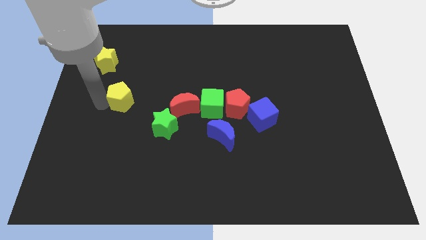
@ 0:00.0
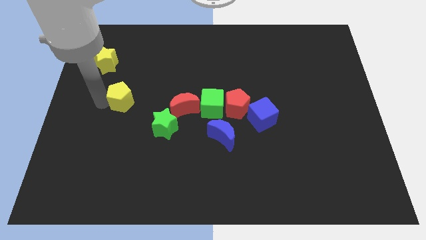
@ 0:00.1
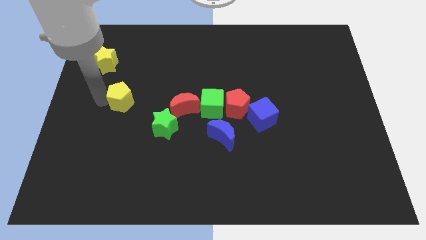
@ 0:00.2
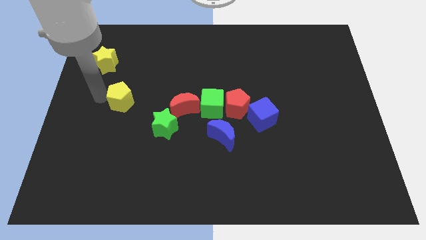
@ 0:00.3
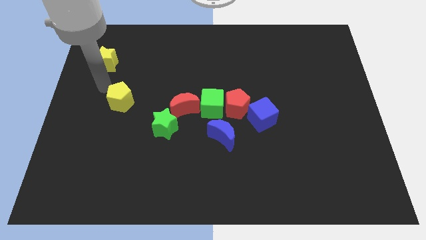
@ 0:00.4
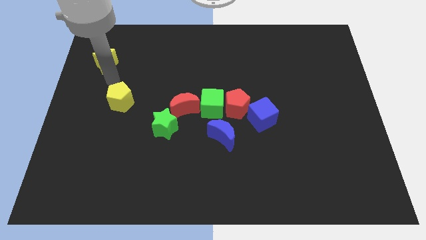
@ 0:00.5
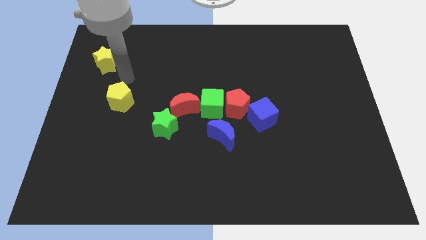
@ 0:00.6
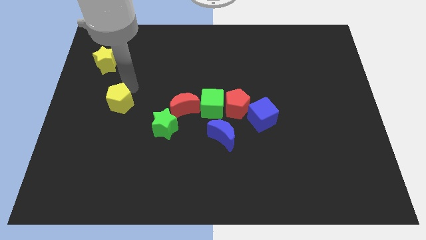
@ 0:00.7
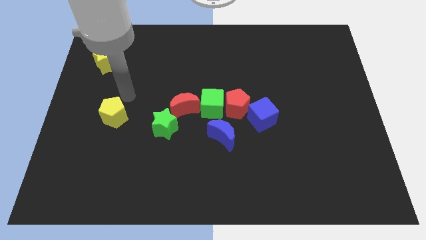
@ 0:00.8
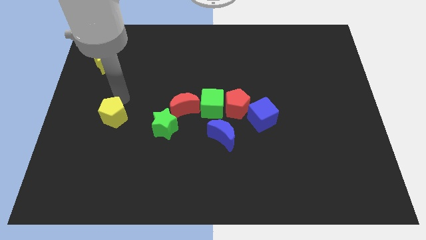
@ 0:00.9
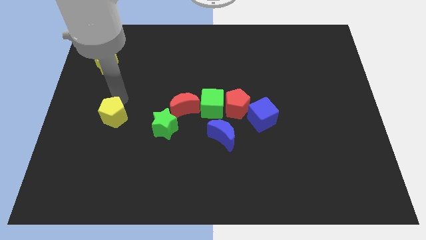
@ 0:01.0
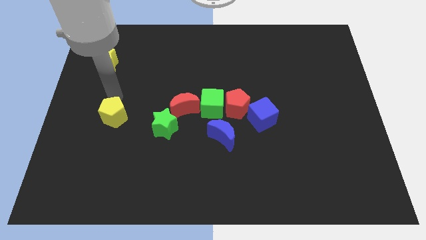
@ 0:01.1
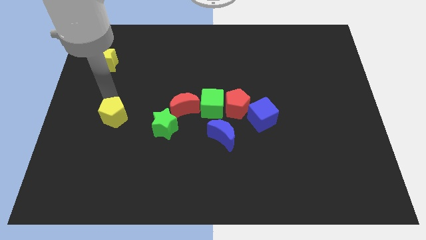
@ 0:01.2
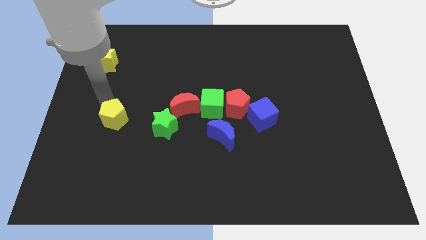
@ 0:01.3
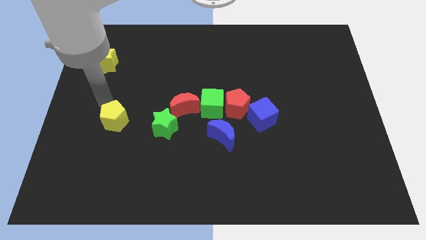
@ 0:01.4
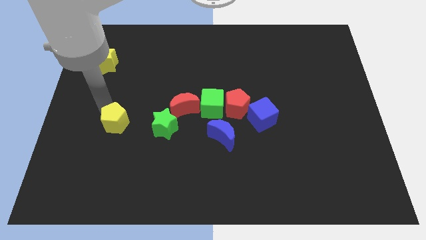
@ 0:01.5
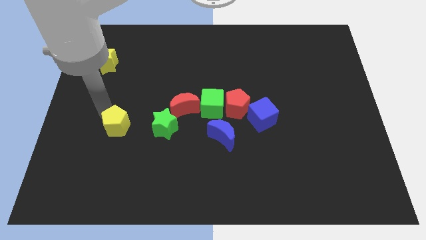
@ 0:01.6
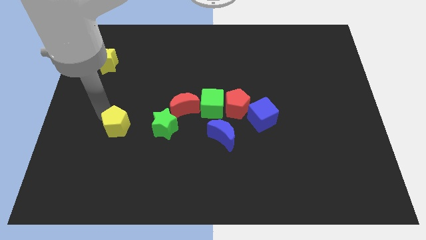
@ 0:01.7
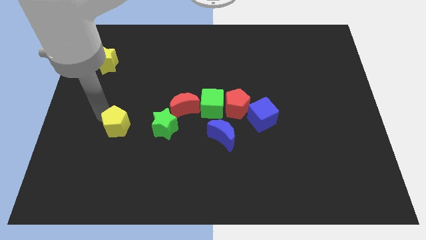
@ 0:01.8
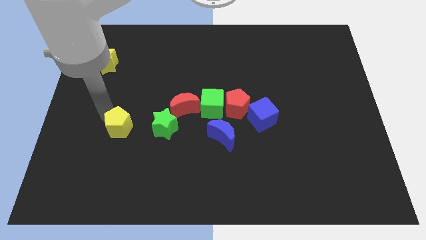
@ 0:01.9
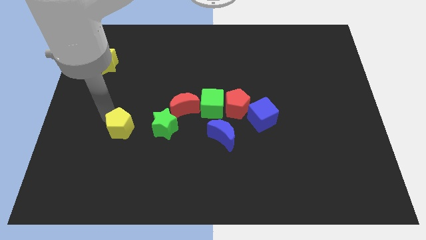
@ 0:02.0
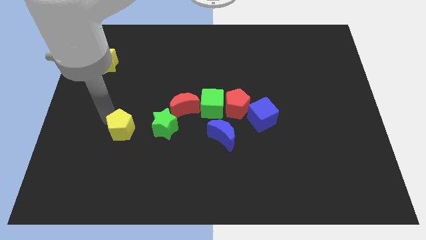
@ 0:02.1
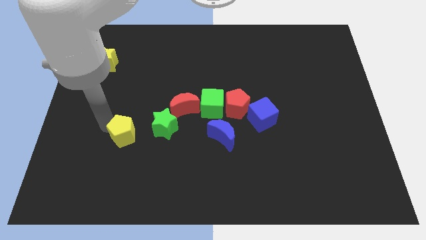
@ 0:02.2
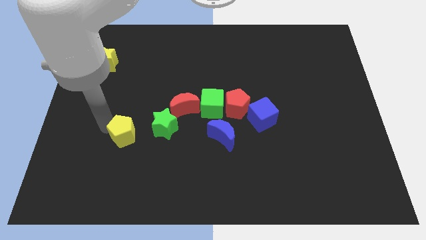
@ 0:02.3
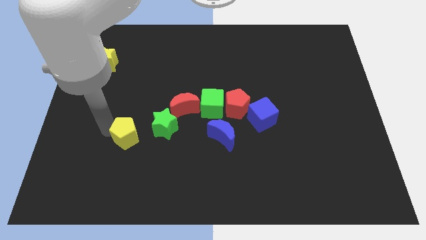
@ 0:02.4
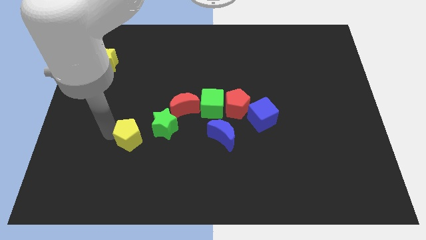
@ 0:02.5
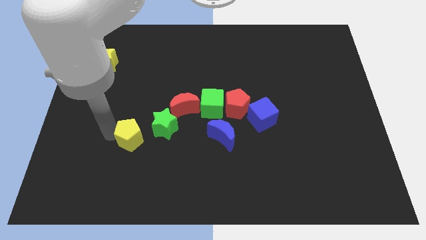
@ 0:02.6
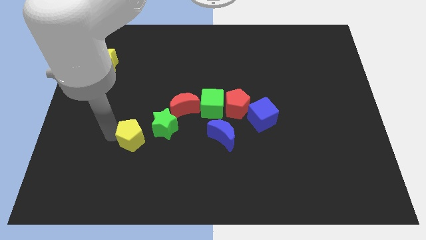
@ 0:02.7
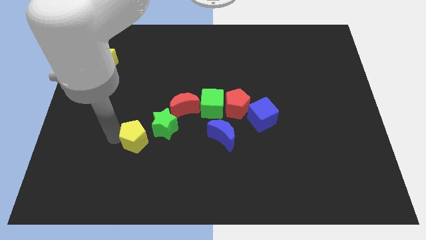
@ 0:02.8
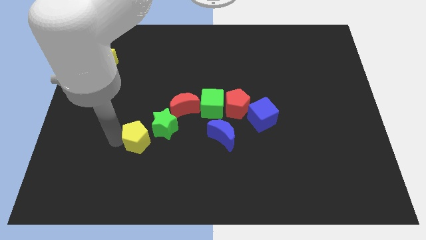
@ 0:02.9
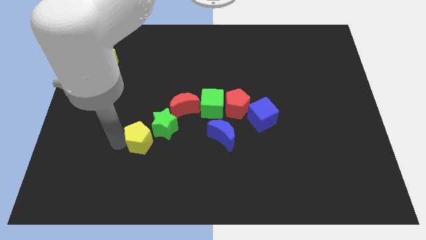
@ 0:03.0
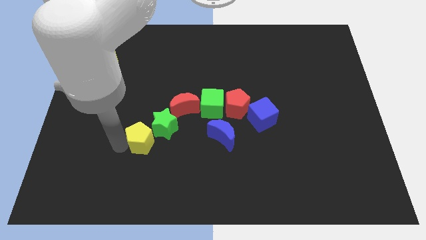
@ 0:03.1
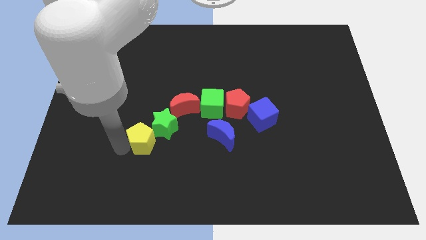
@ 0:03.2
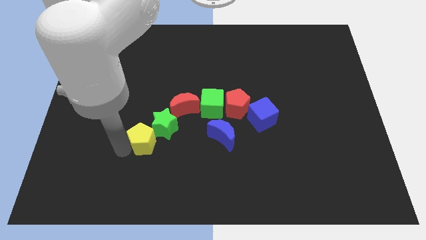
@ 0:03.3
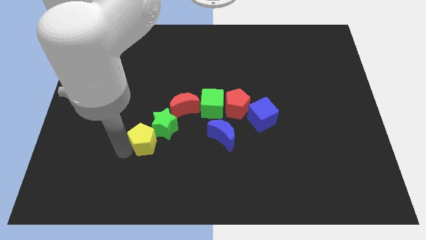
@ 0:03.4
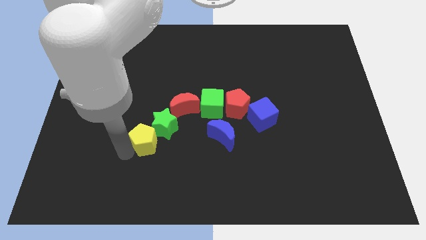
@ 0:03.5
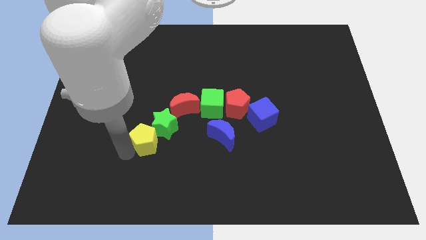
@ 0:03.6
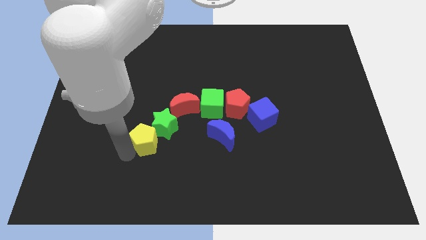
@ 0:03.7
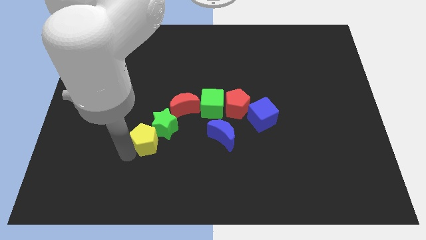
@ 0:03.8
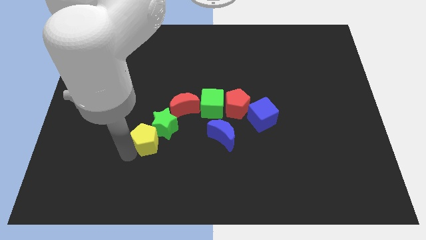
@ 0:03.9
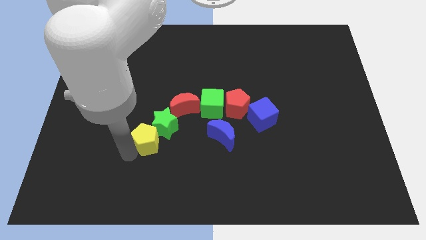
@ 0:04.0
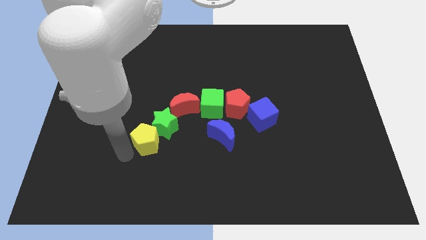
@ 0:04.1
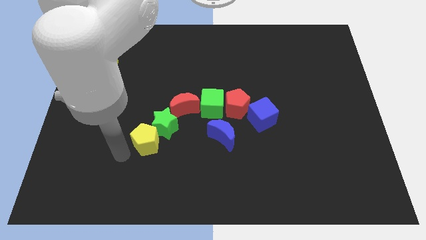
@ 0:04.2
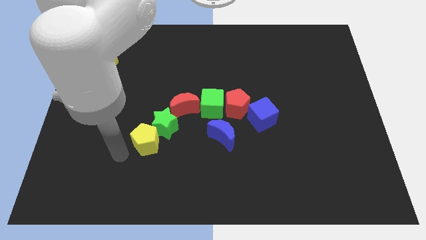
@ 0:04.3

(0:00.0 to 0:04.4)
push the yellow pentagon to the bottom of the green star

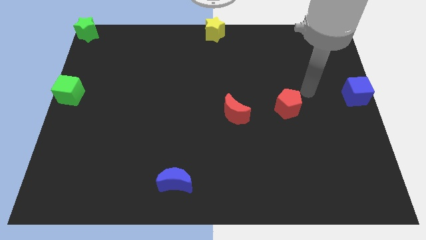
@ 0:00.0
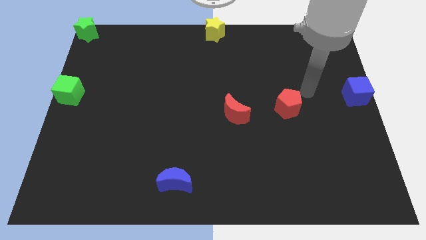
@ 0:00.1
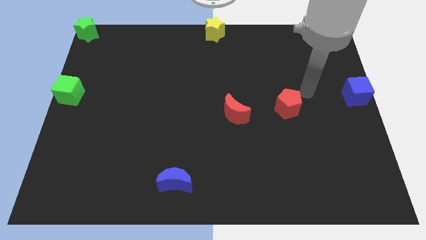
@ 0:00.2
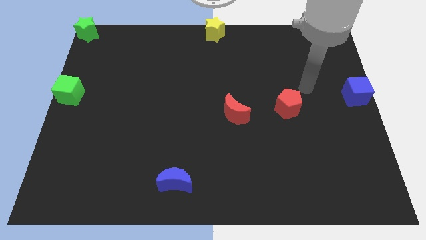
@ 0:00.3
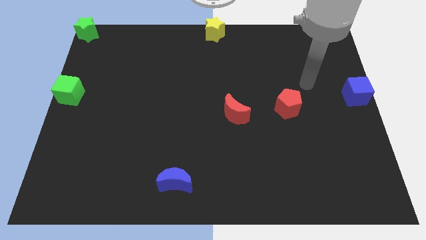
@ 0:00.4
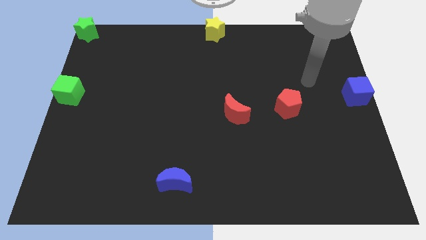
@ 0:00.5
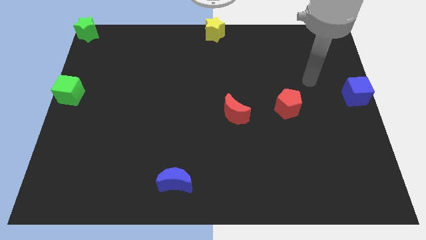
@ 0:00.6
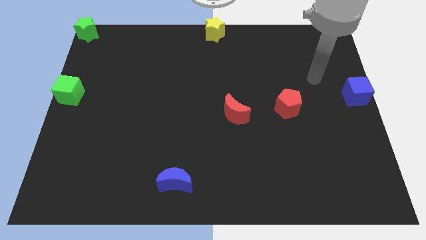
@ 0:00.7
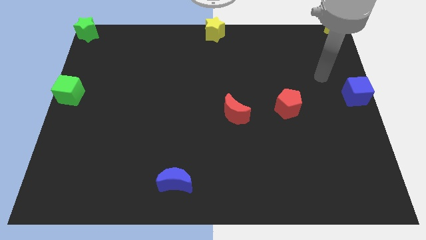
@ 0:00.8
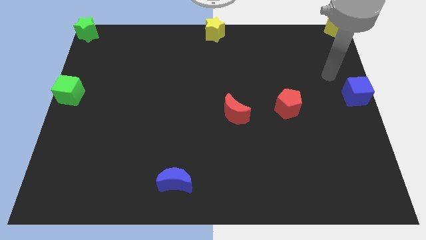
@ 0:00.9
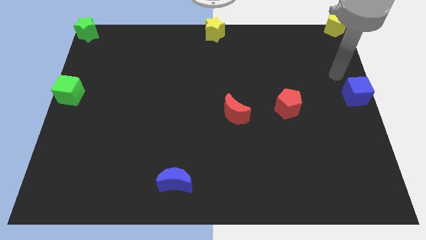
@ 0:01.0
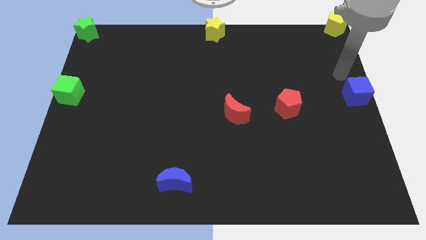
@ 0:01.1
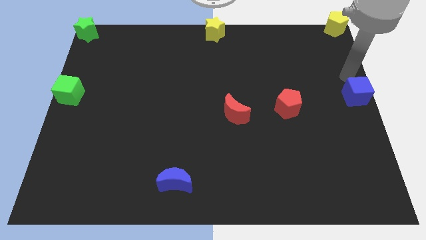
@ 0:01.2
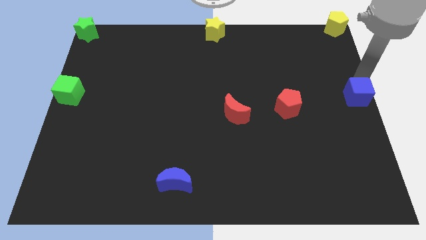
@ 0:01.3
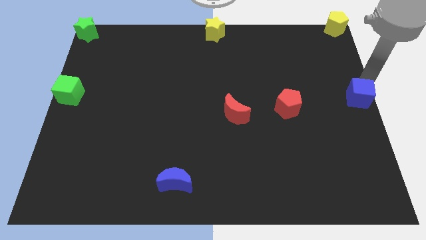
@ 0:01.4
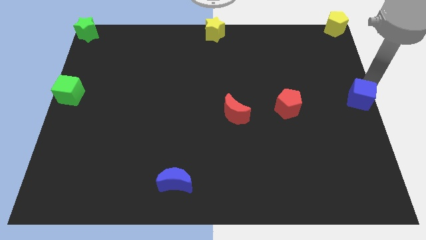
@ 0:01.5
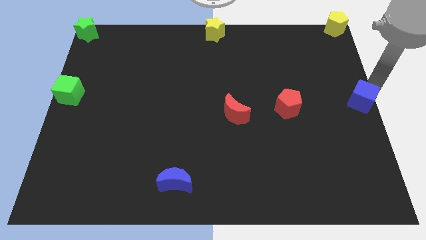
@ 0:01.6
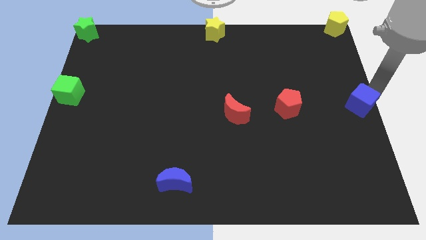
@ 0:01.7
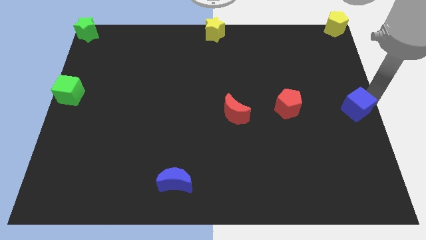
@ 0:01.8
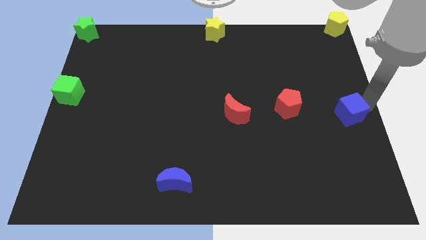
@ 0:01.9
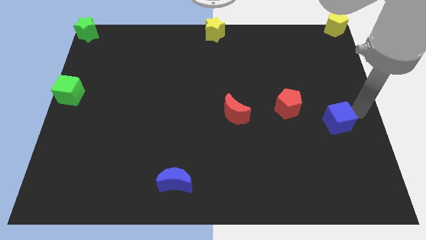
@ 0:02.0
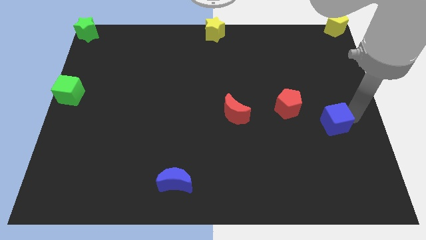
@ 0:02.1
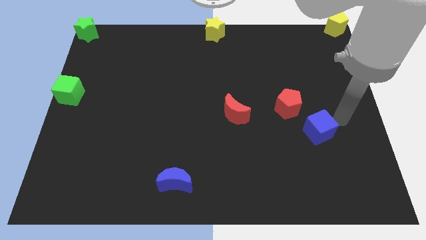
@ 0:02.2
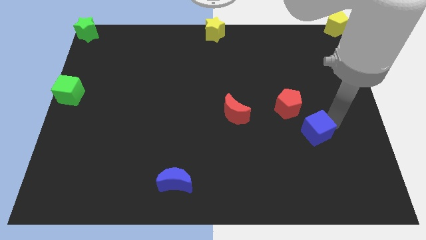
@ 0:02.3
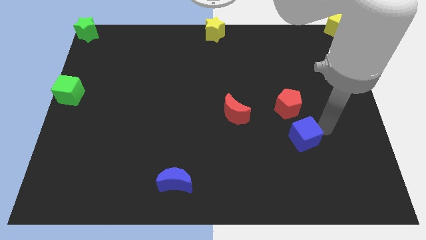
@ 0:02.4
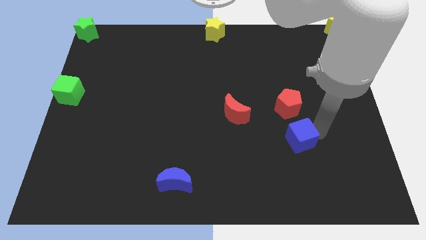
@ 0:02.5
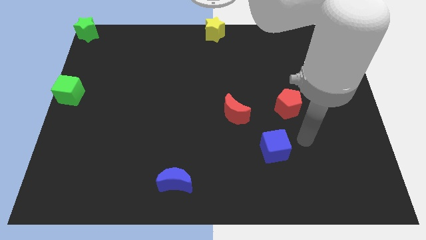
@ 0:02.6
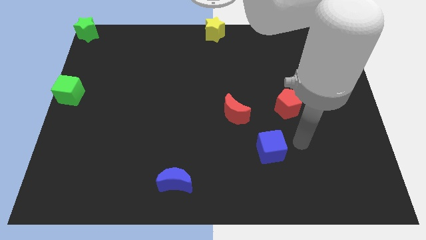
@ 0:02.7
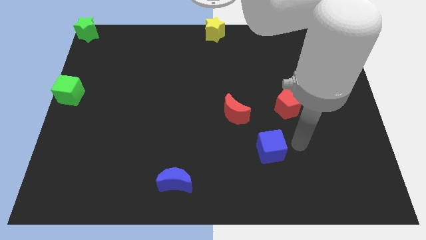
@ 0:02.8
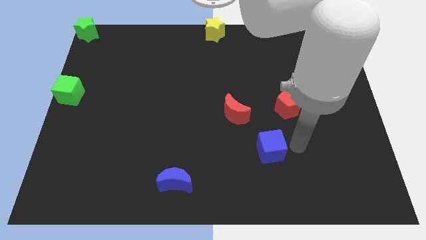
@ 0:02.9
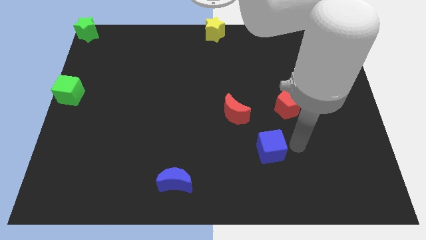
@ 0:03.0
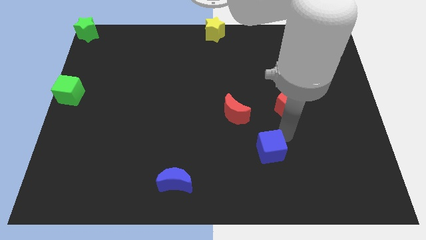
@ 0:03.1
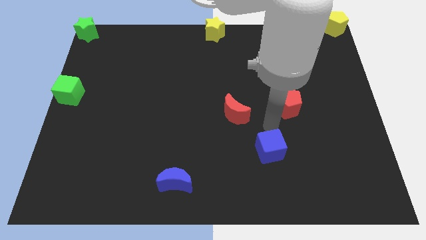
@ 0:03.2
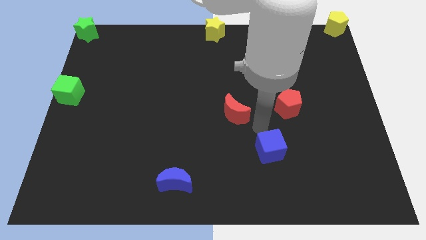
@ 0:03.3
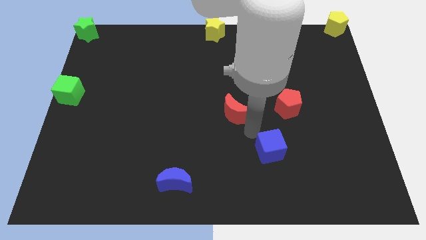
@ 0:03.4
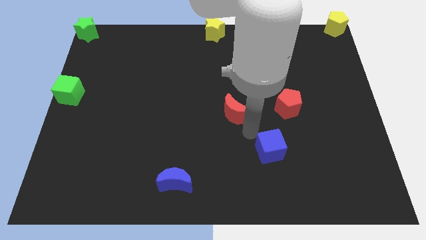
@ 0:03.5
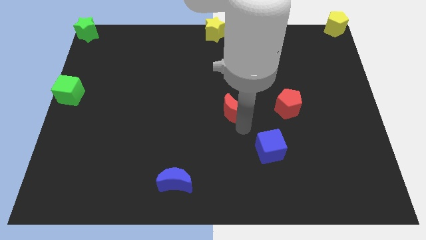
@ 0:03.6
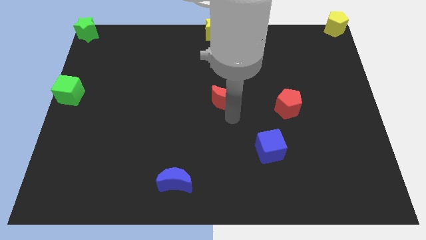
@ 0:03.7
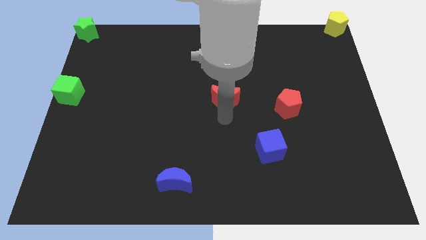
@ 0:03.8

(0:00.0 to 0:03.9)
push the blue cube to the bottom right of the red crescent

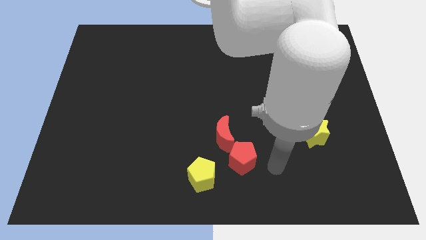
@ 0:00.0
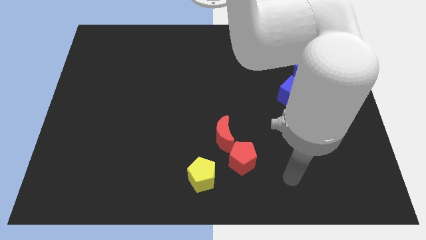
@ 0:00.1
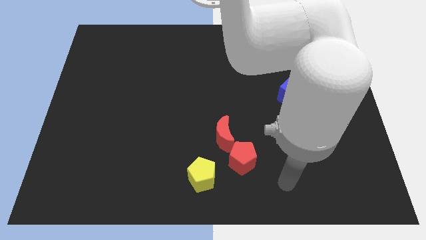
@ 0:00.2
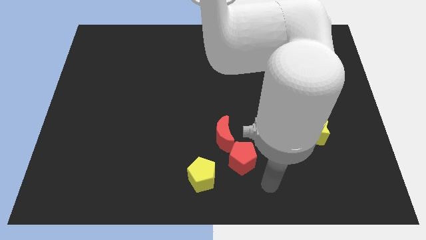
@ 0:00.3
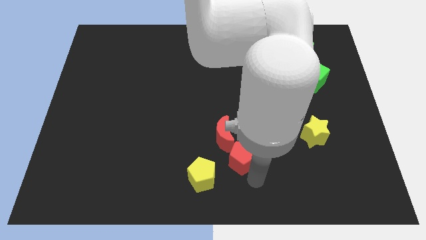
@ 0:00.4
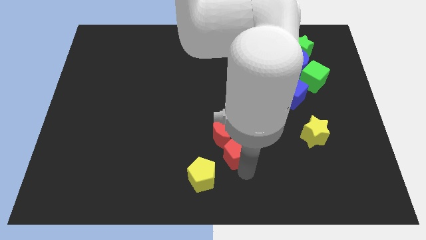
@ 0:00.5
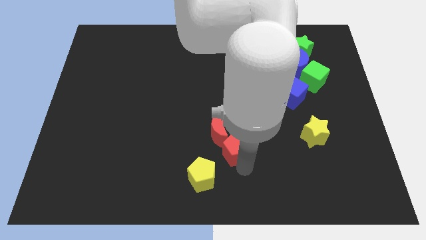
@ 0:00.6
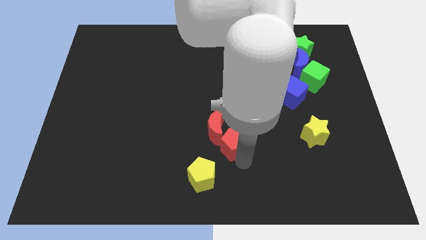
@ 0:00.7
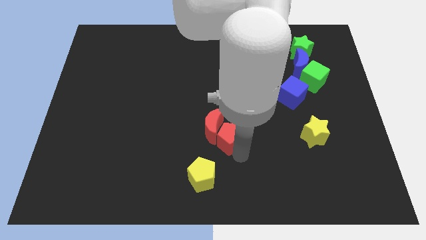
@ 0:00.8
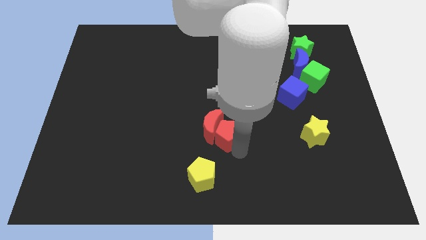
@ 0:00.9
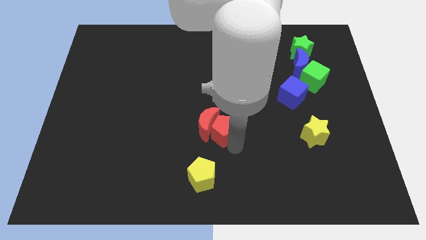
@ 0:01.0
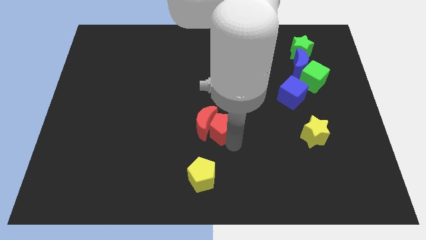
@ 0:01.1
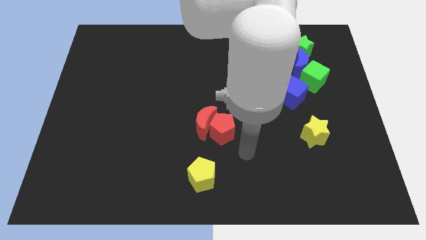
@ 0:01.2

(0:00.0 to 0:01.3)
move the red pentagon inside the red crescent
